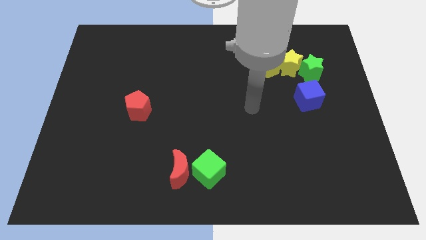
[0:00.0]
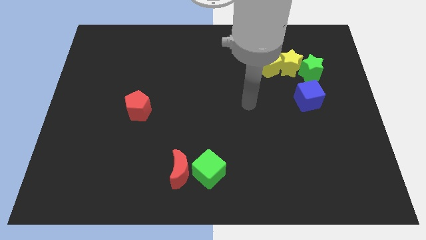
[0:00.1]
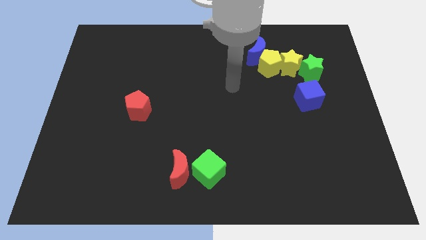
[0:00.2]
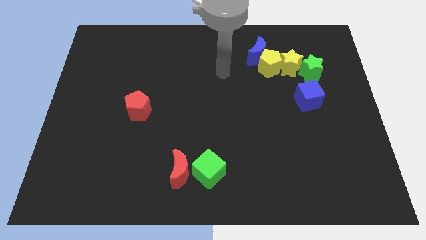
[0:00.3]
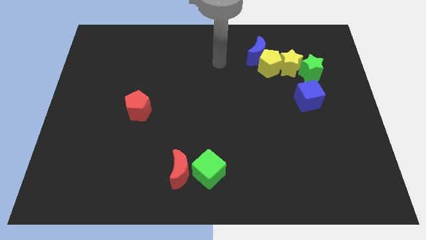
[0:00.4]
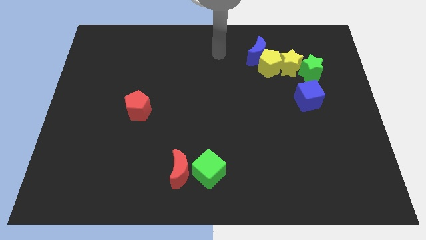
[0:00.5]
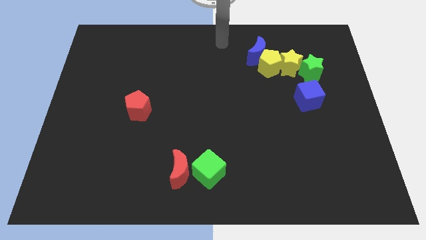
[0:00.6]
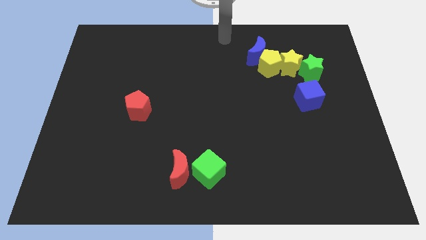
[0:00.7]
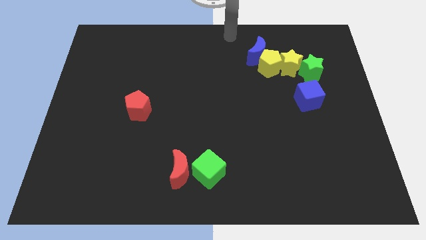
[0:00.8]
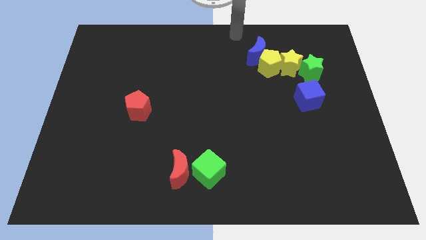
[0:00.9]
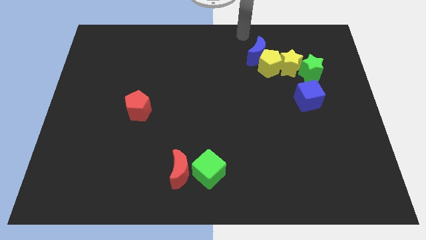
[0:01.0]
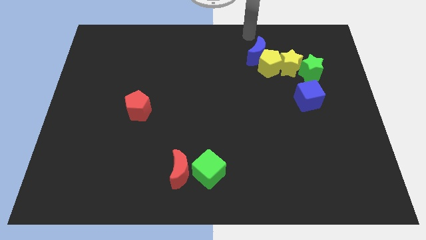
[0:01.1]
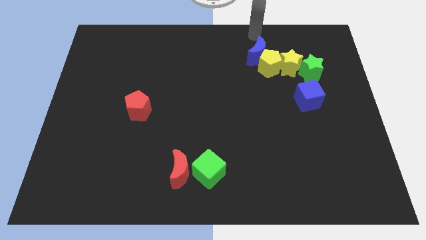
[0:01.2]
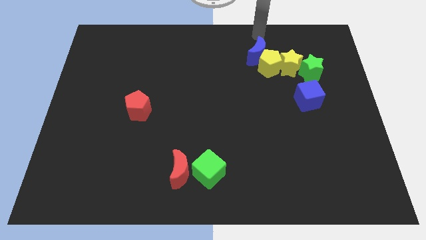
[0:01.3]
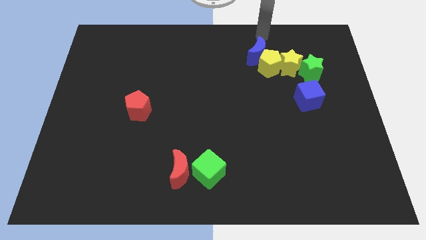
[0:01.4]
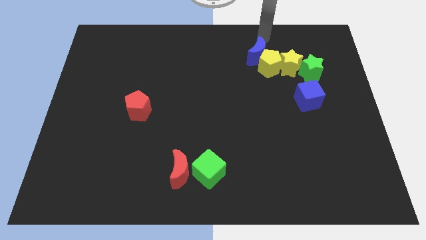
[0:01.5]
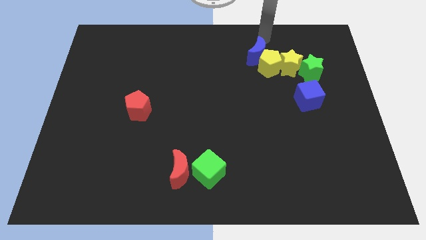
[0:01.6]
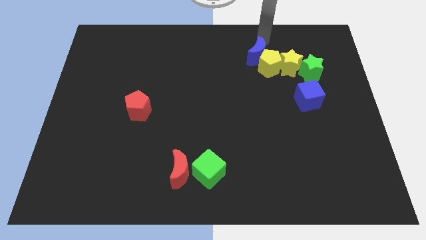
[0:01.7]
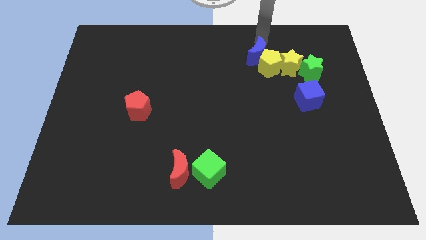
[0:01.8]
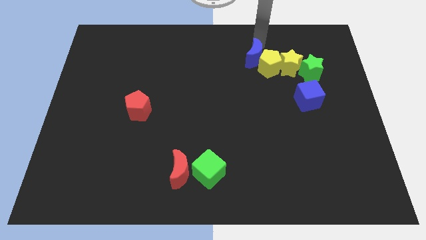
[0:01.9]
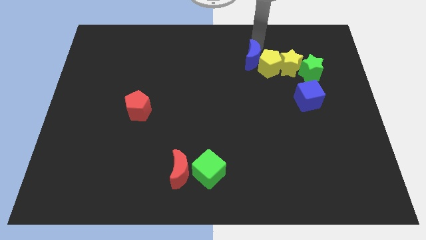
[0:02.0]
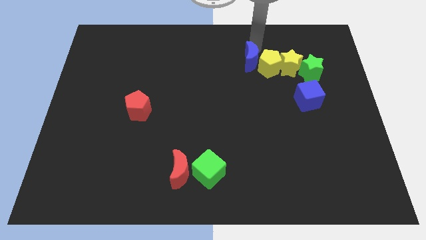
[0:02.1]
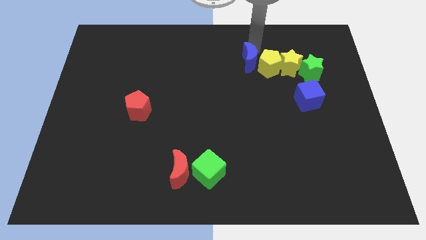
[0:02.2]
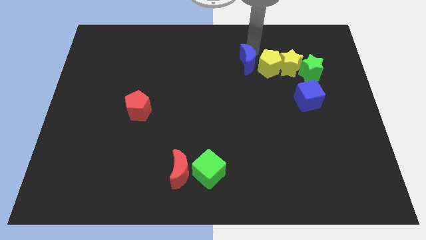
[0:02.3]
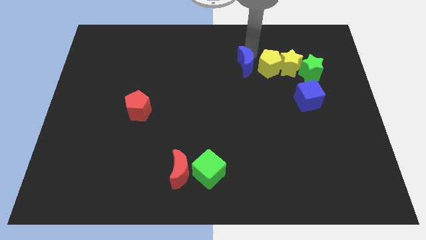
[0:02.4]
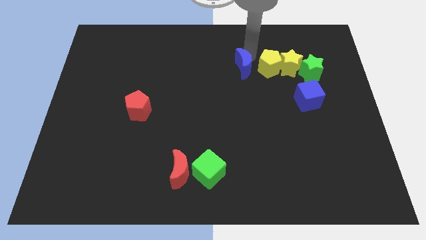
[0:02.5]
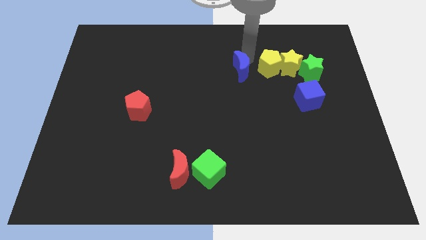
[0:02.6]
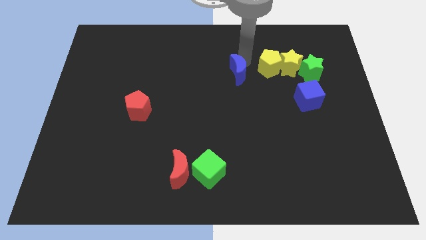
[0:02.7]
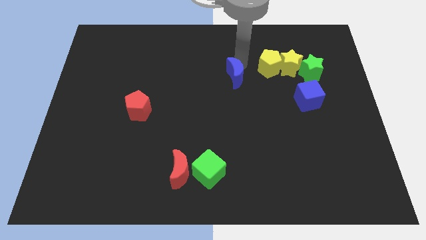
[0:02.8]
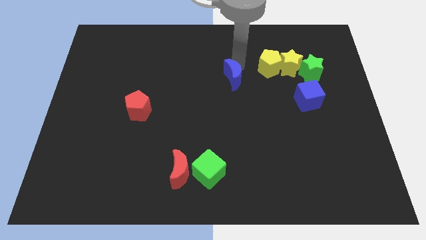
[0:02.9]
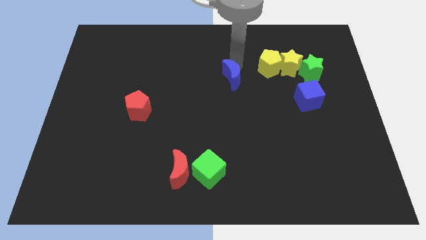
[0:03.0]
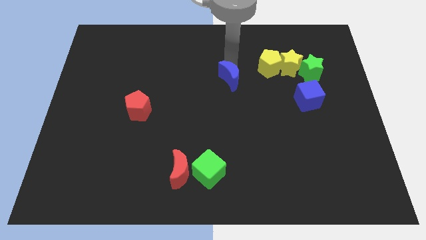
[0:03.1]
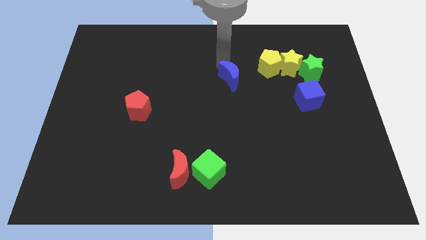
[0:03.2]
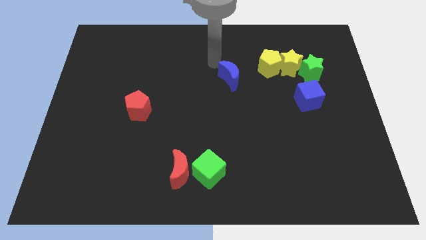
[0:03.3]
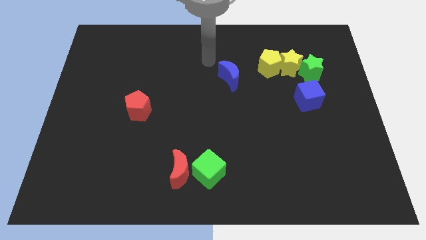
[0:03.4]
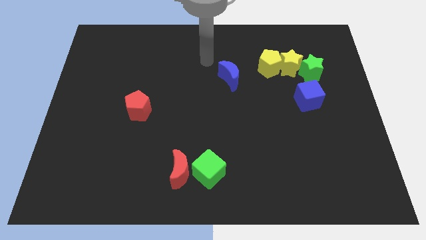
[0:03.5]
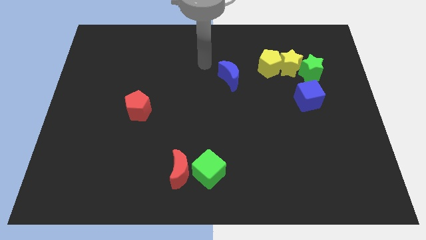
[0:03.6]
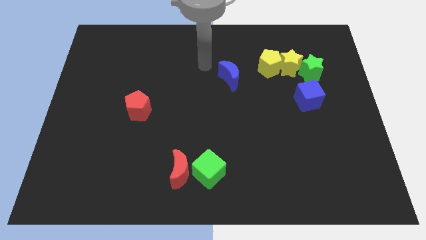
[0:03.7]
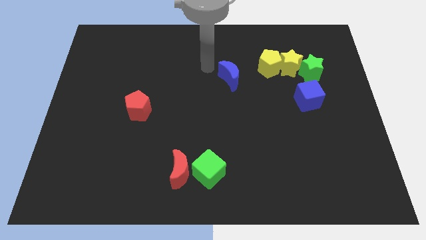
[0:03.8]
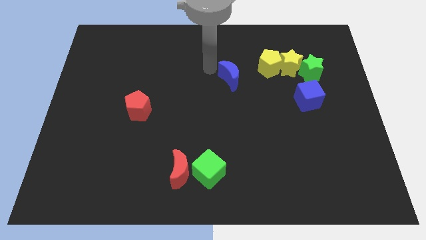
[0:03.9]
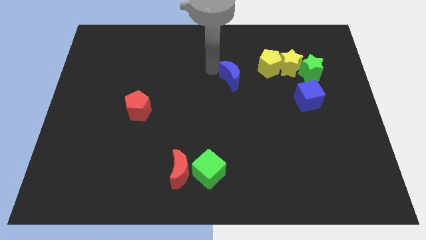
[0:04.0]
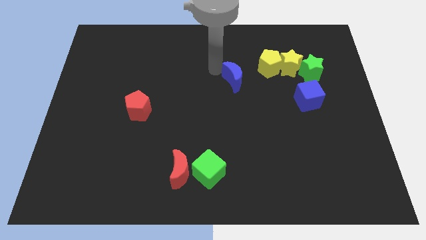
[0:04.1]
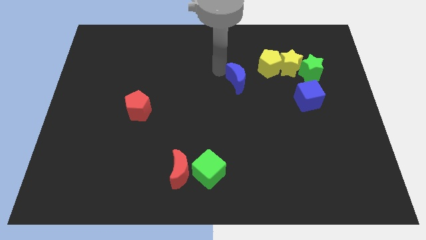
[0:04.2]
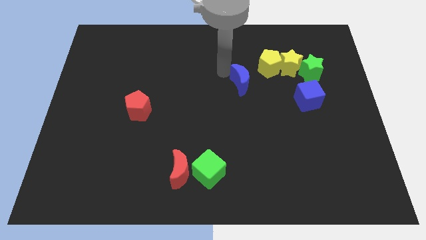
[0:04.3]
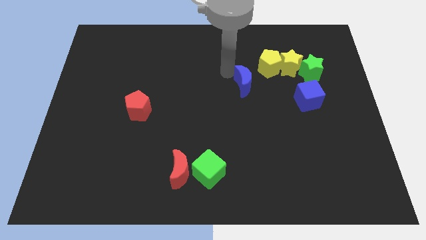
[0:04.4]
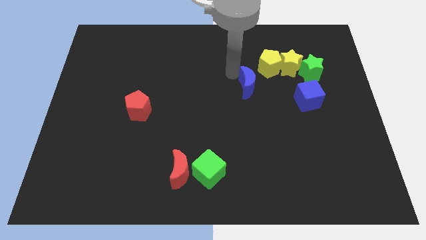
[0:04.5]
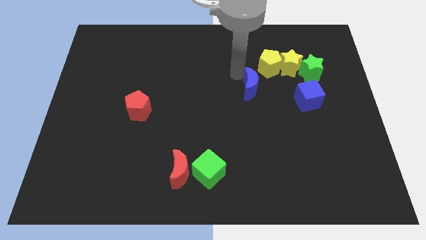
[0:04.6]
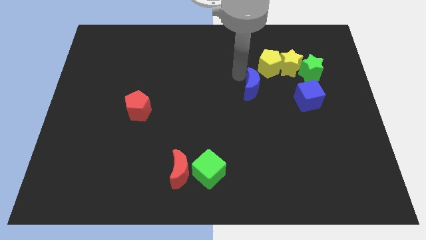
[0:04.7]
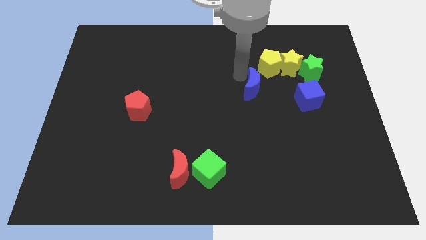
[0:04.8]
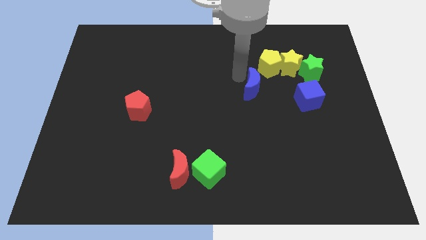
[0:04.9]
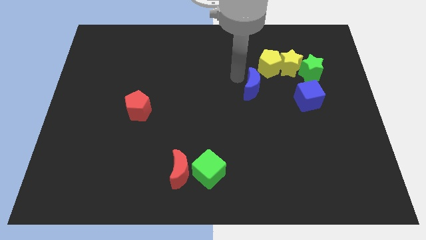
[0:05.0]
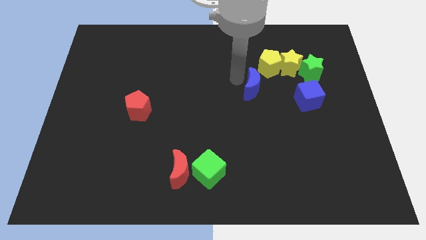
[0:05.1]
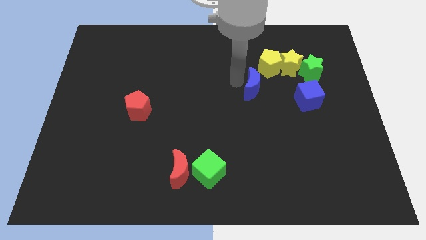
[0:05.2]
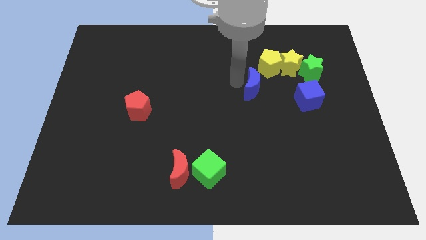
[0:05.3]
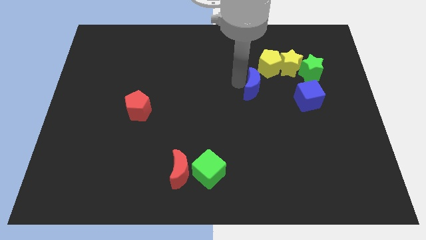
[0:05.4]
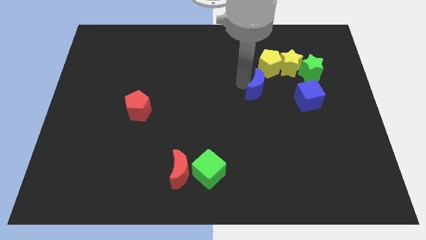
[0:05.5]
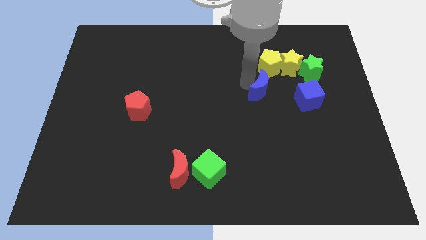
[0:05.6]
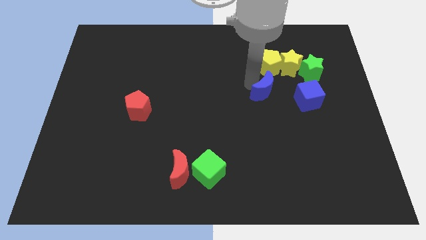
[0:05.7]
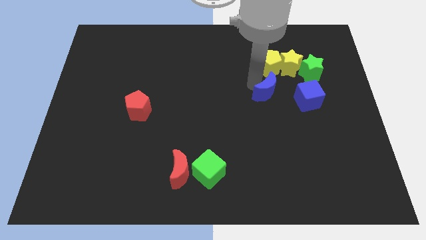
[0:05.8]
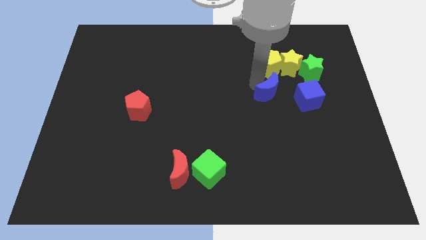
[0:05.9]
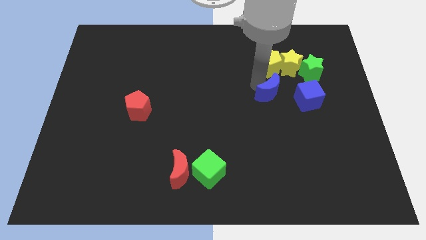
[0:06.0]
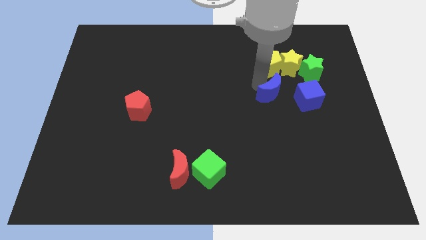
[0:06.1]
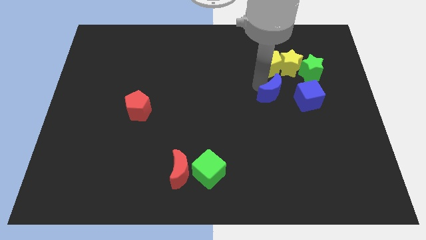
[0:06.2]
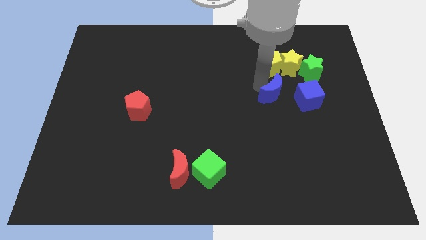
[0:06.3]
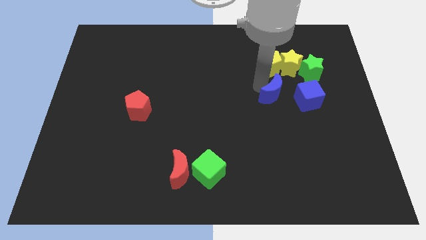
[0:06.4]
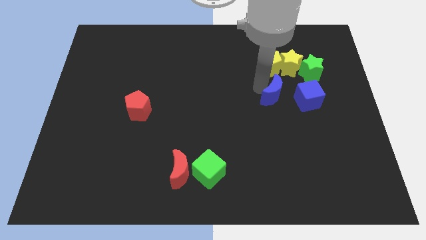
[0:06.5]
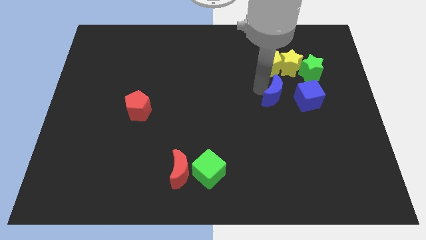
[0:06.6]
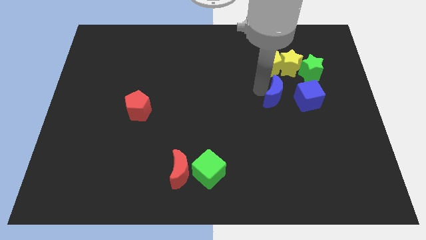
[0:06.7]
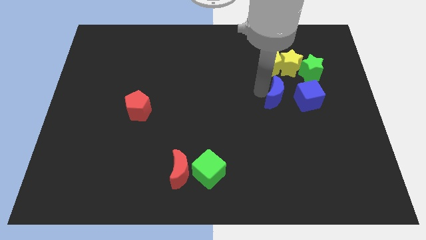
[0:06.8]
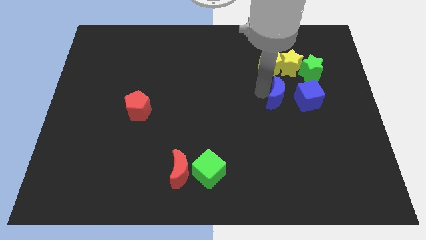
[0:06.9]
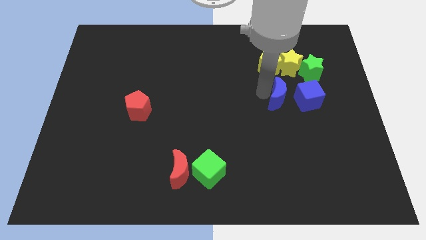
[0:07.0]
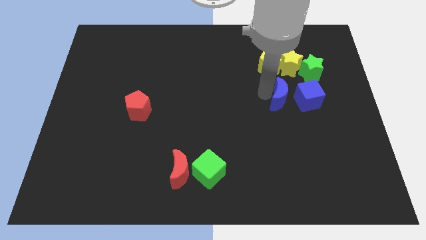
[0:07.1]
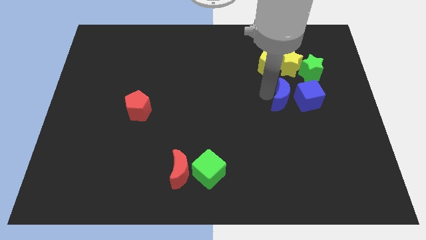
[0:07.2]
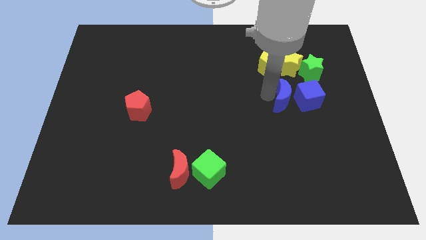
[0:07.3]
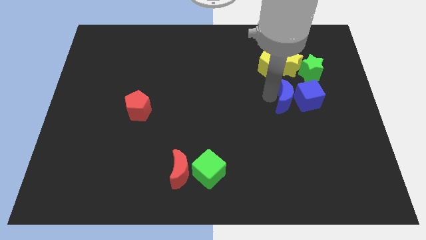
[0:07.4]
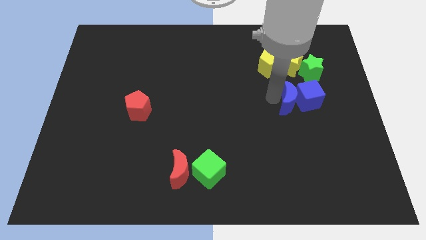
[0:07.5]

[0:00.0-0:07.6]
push the blue moon towards the blue cube

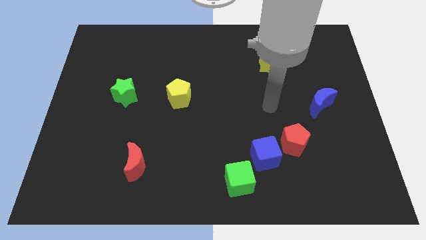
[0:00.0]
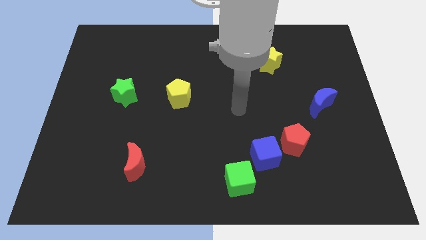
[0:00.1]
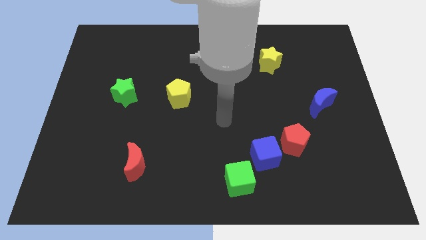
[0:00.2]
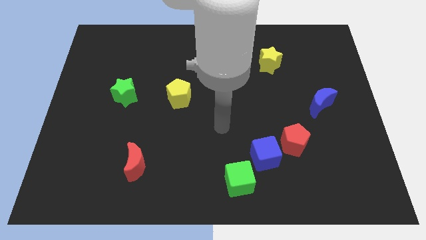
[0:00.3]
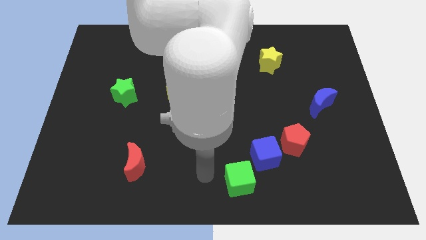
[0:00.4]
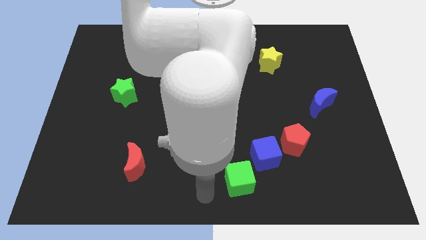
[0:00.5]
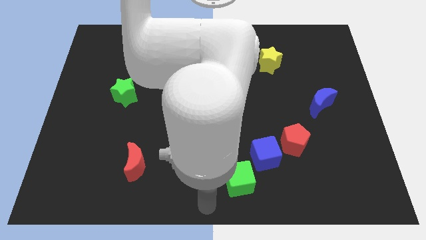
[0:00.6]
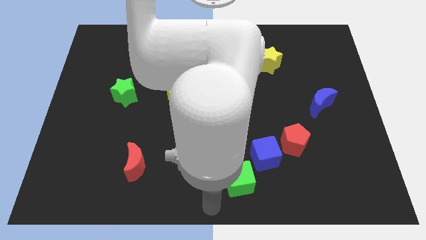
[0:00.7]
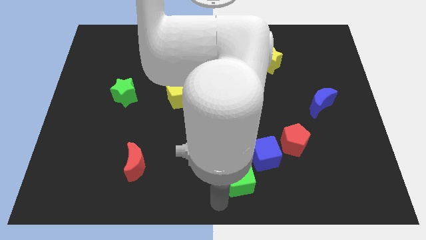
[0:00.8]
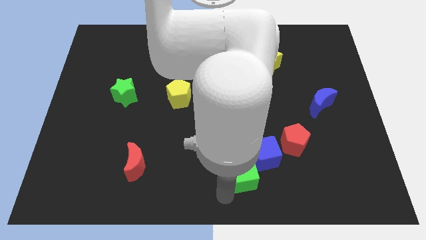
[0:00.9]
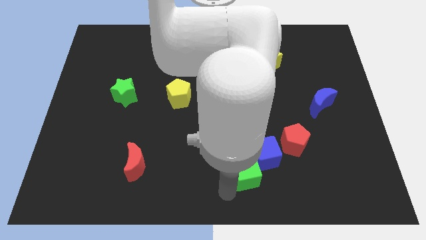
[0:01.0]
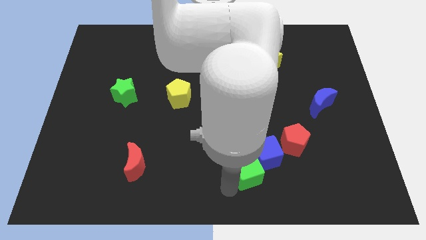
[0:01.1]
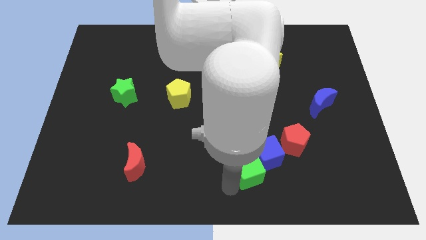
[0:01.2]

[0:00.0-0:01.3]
move the green cube towards the blue cube
